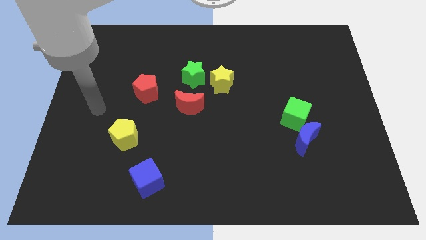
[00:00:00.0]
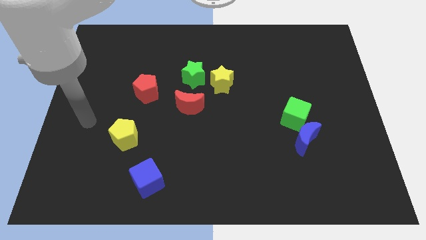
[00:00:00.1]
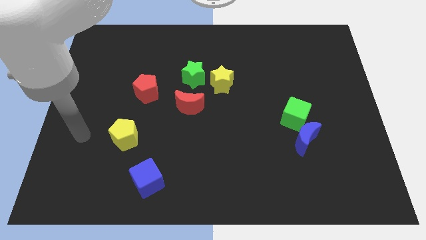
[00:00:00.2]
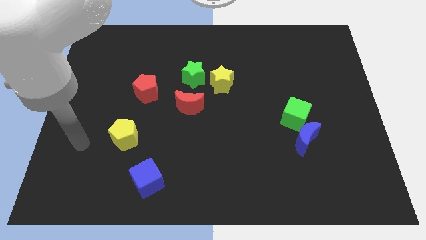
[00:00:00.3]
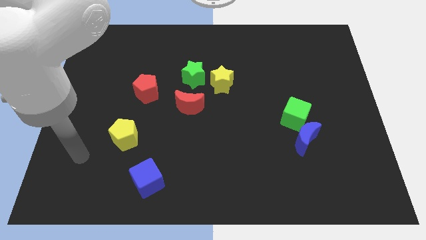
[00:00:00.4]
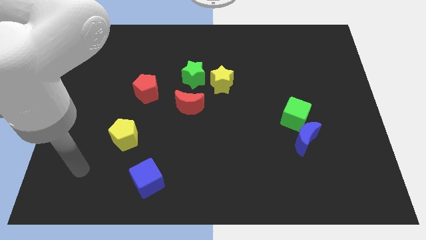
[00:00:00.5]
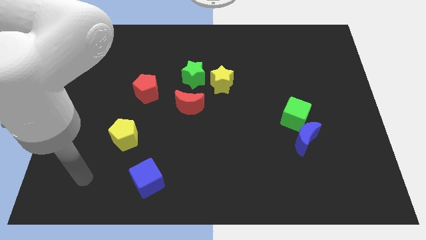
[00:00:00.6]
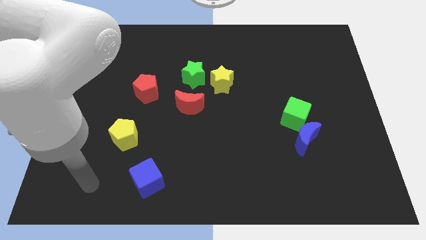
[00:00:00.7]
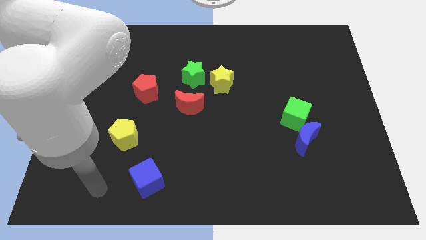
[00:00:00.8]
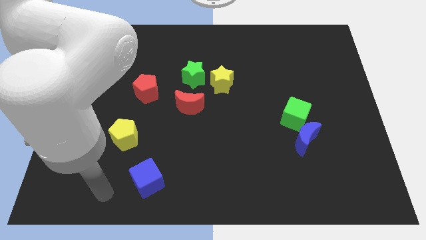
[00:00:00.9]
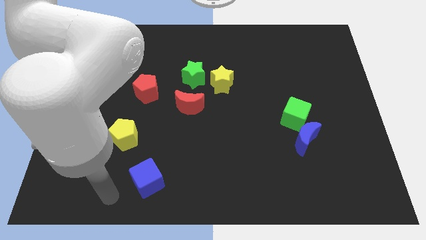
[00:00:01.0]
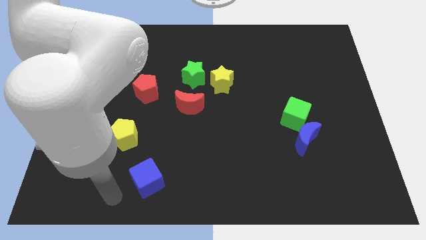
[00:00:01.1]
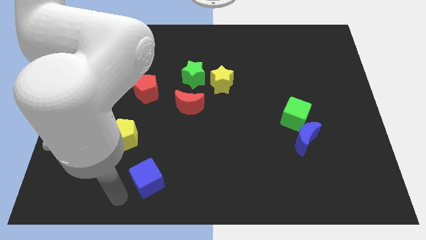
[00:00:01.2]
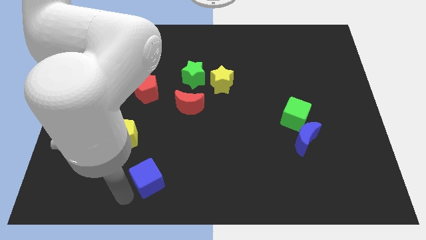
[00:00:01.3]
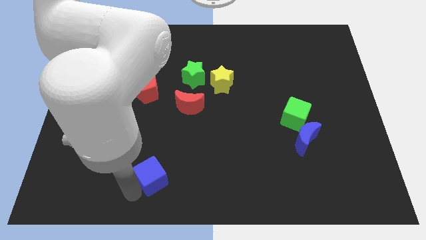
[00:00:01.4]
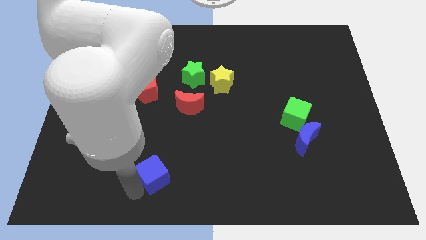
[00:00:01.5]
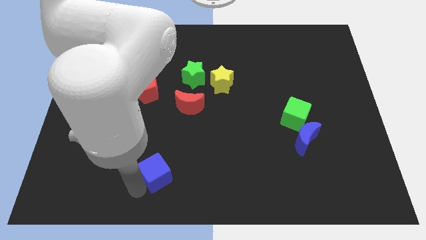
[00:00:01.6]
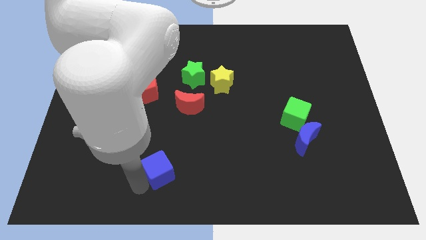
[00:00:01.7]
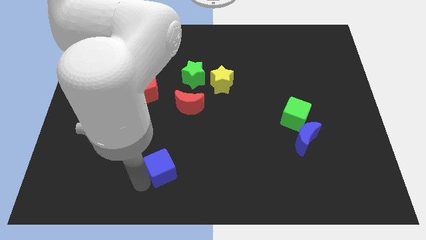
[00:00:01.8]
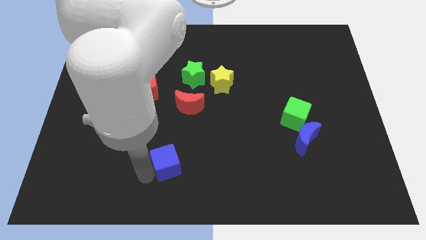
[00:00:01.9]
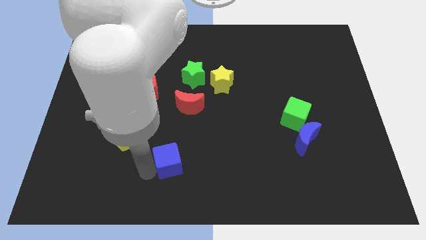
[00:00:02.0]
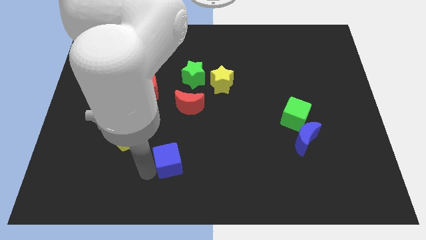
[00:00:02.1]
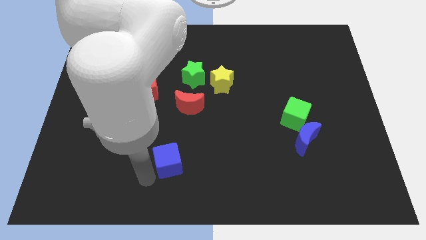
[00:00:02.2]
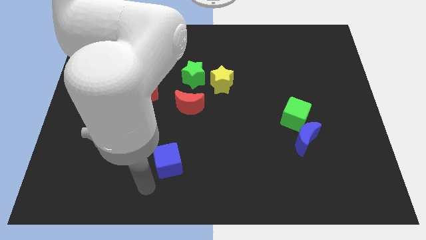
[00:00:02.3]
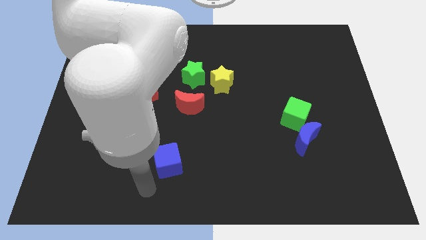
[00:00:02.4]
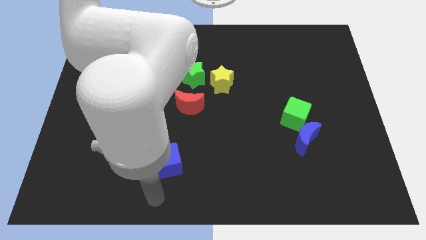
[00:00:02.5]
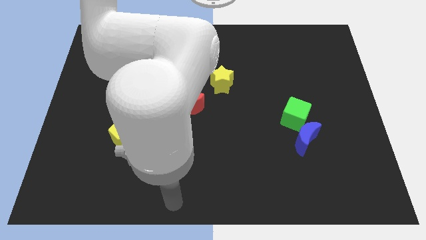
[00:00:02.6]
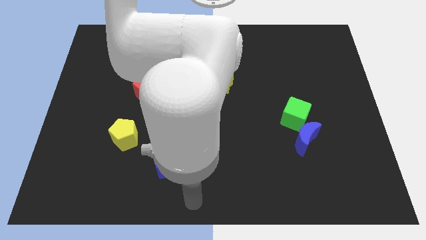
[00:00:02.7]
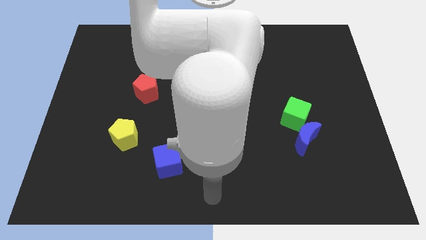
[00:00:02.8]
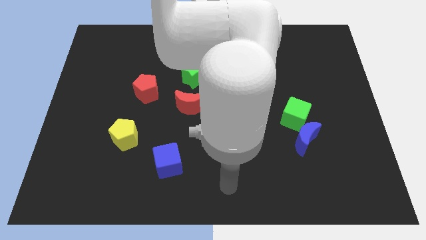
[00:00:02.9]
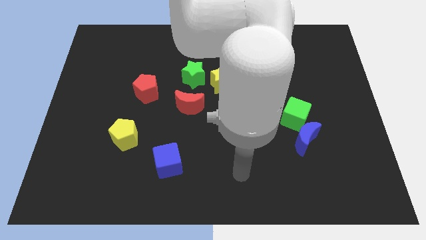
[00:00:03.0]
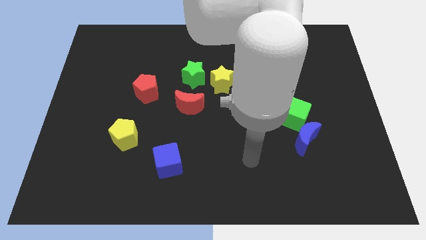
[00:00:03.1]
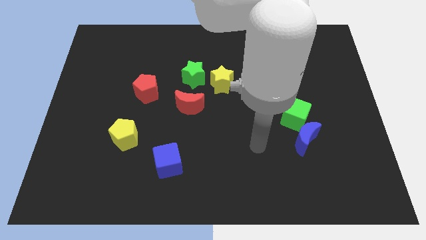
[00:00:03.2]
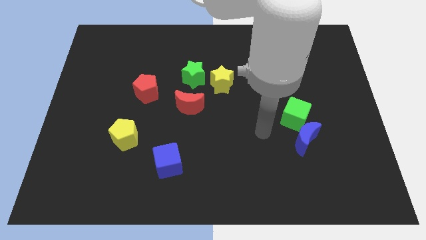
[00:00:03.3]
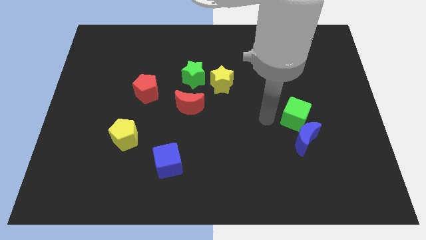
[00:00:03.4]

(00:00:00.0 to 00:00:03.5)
push the blue cube slightly toward the top of the board

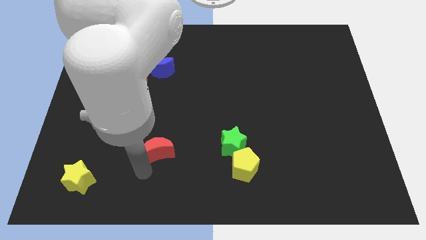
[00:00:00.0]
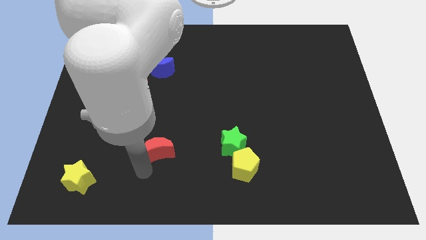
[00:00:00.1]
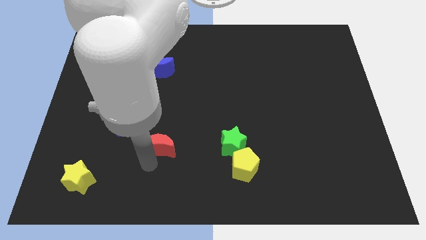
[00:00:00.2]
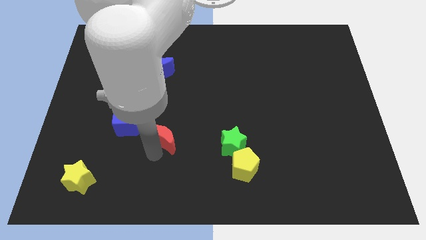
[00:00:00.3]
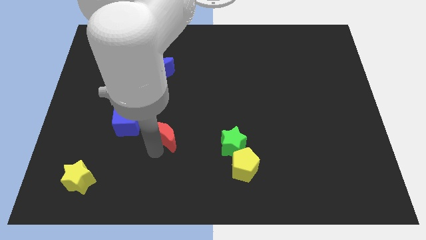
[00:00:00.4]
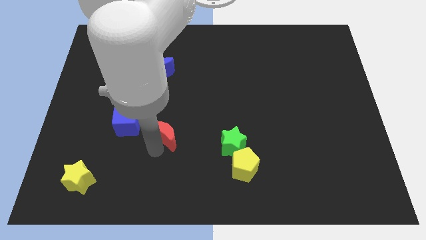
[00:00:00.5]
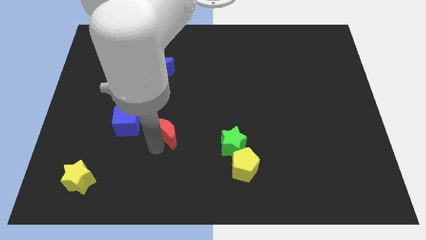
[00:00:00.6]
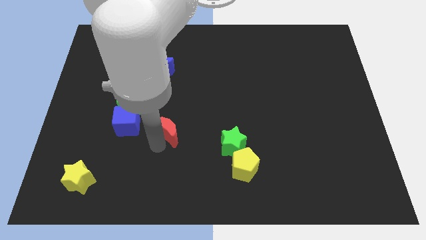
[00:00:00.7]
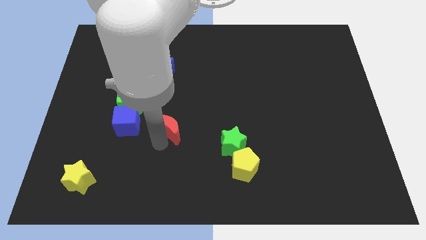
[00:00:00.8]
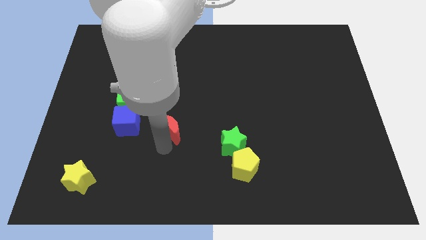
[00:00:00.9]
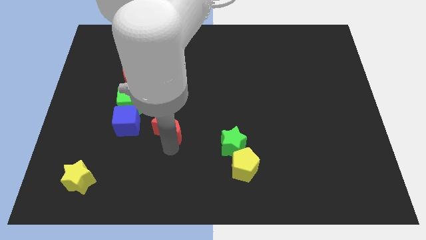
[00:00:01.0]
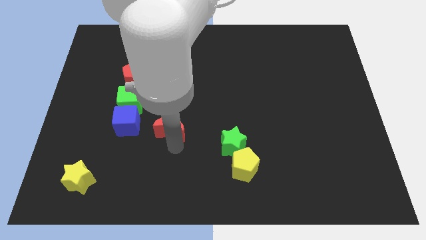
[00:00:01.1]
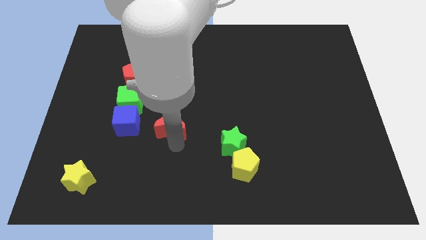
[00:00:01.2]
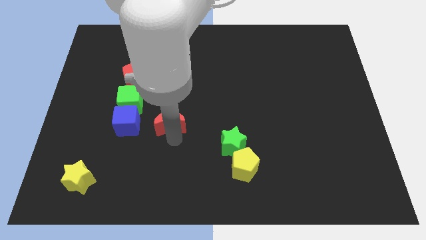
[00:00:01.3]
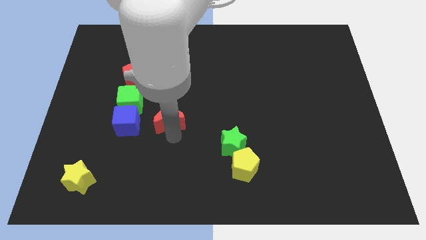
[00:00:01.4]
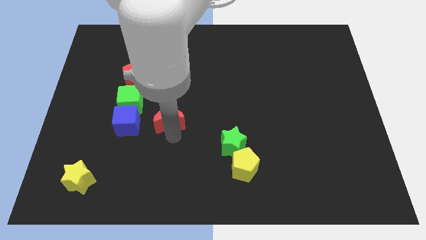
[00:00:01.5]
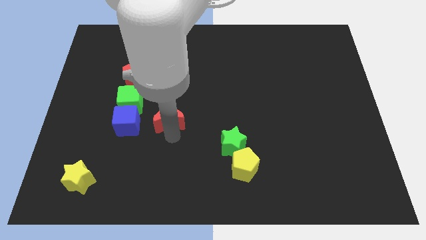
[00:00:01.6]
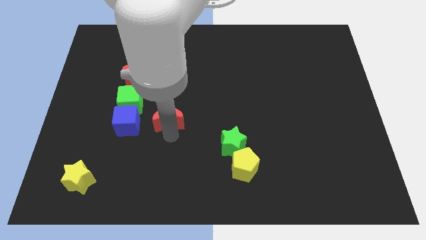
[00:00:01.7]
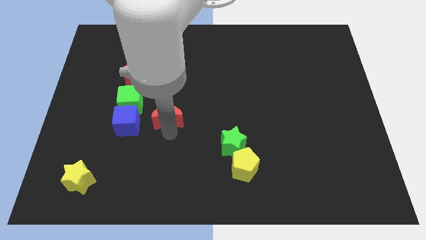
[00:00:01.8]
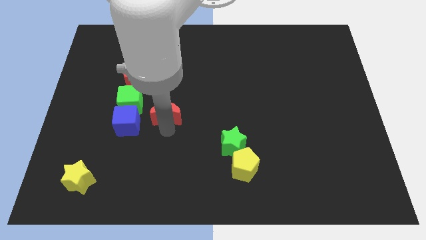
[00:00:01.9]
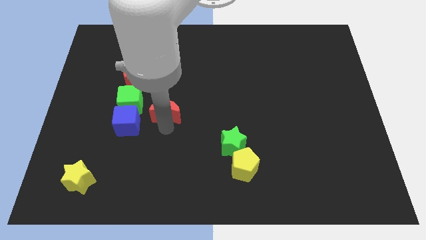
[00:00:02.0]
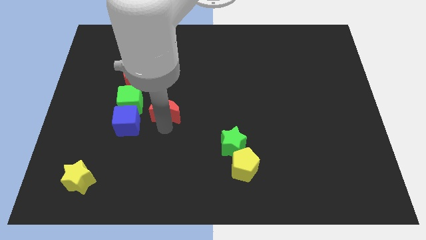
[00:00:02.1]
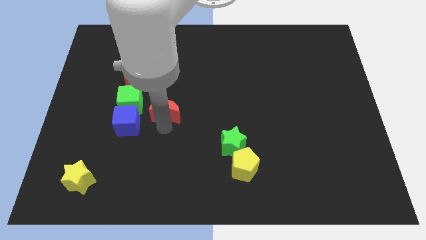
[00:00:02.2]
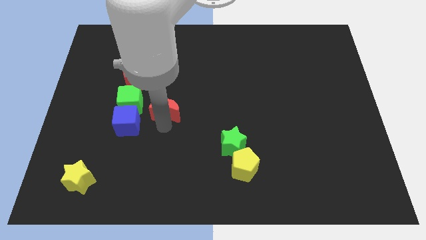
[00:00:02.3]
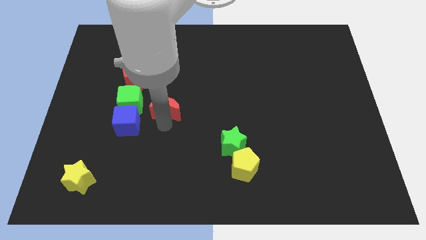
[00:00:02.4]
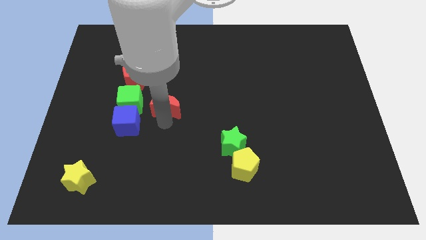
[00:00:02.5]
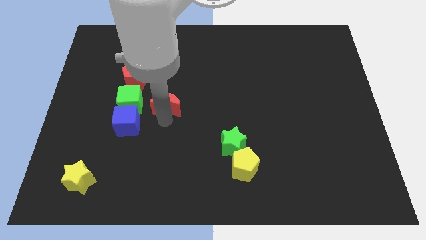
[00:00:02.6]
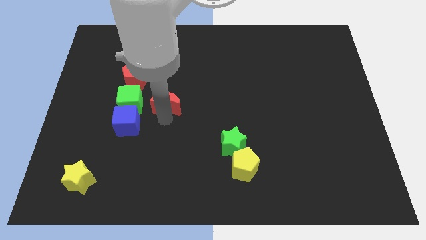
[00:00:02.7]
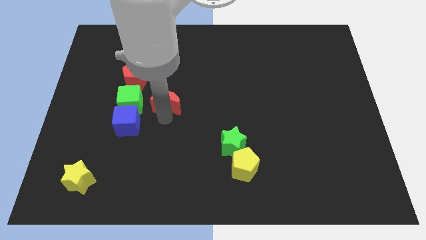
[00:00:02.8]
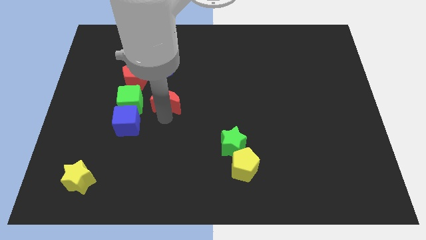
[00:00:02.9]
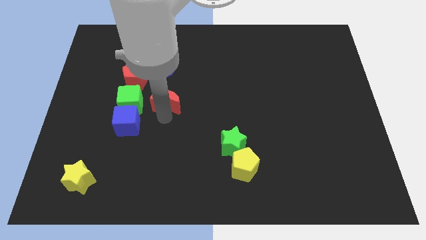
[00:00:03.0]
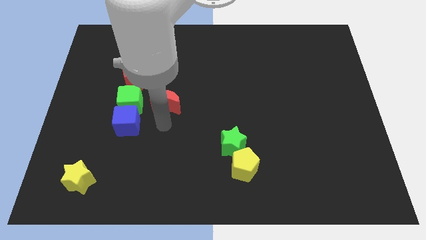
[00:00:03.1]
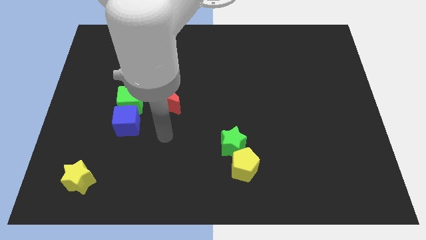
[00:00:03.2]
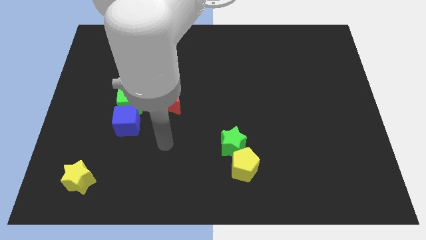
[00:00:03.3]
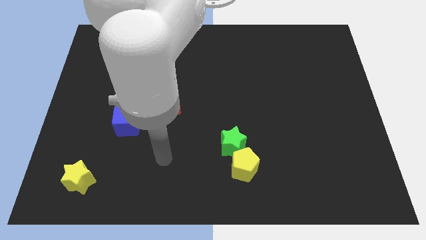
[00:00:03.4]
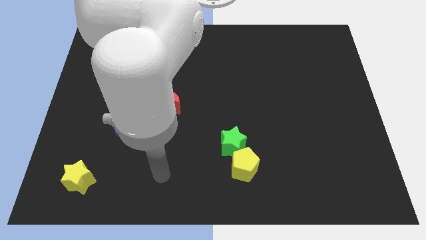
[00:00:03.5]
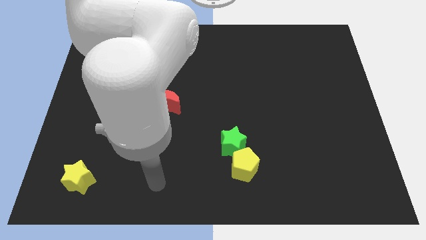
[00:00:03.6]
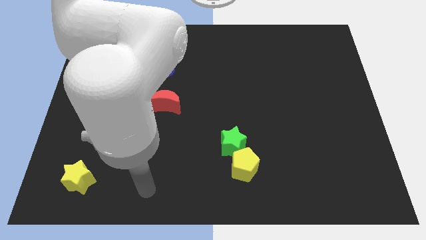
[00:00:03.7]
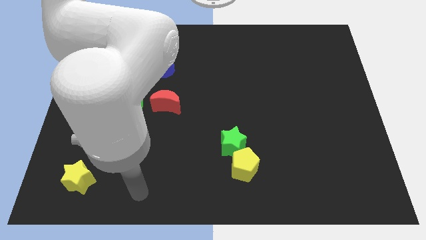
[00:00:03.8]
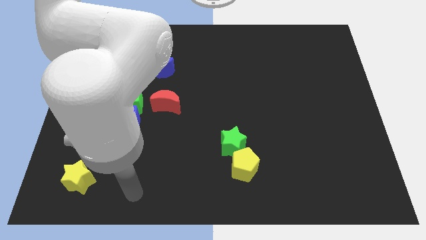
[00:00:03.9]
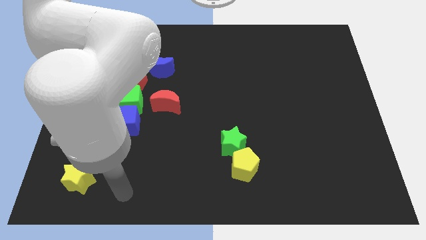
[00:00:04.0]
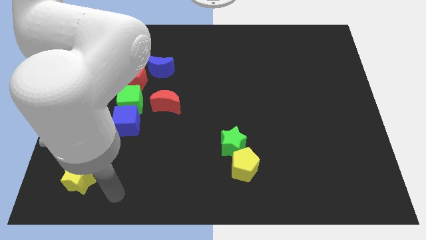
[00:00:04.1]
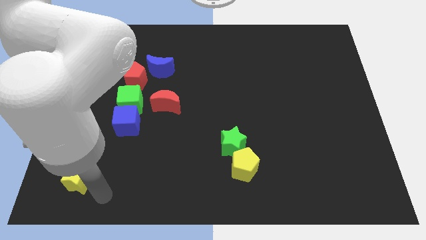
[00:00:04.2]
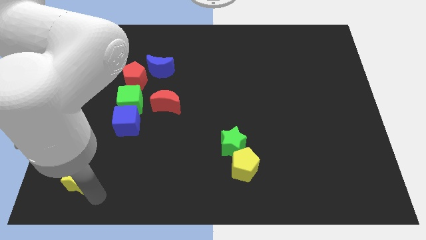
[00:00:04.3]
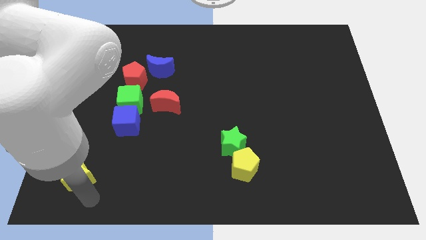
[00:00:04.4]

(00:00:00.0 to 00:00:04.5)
move the red crescent to the right of the green cube

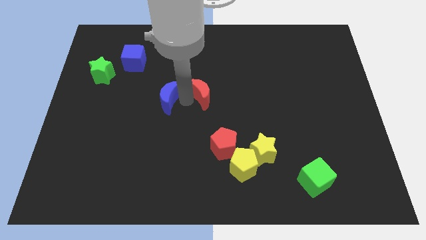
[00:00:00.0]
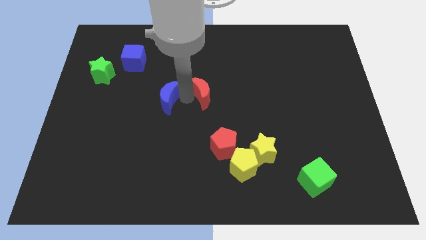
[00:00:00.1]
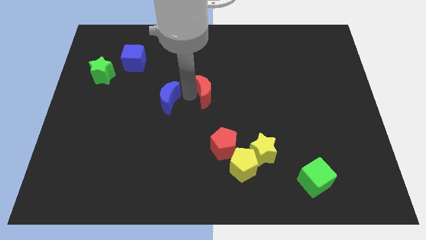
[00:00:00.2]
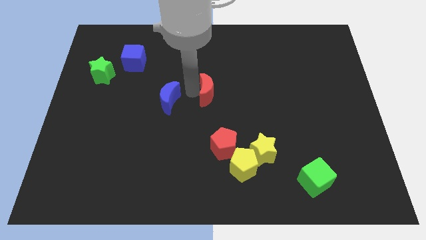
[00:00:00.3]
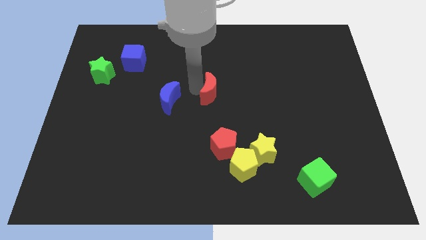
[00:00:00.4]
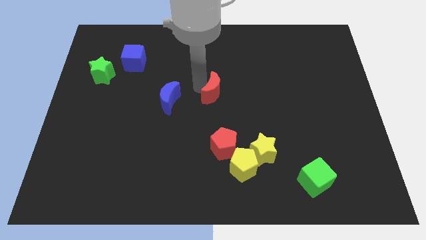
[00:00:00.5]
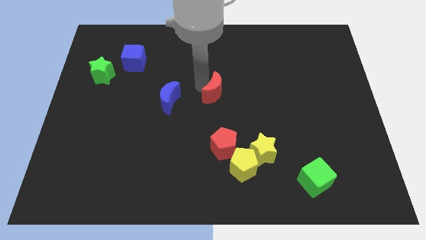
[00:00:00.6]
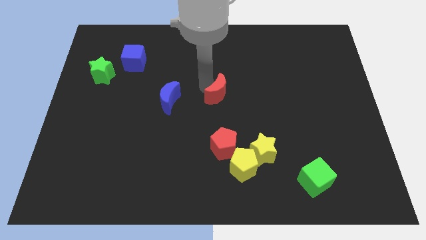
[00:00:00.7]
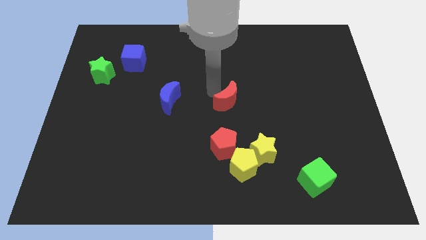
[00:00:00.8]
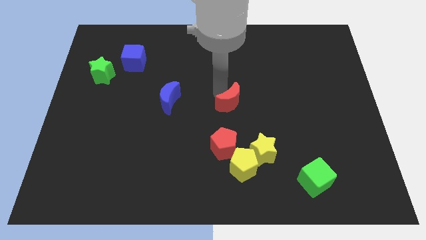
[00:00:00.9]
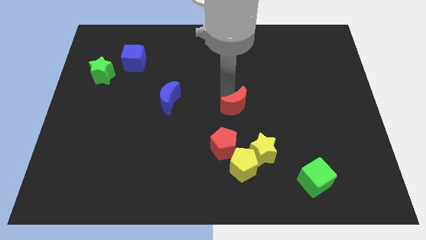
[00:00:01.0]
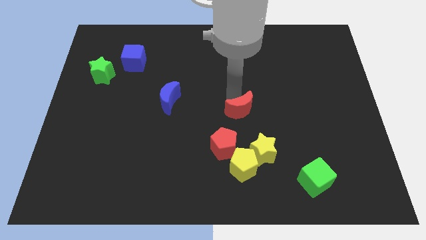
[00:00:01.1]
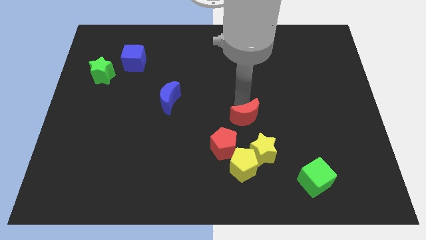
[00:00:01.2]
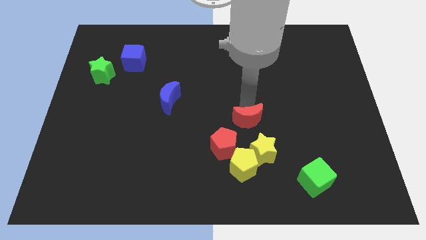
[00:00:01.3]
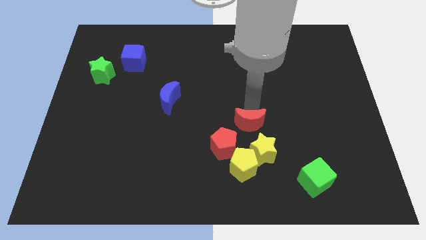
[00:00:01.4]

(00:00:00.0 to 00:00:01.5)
push the red moon away from the blue moon
